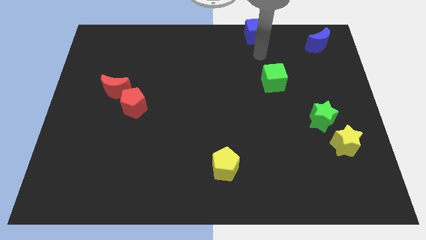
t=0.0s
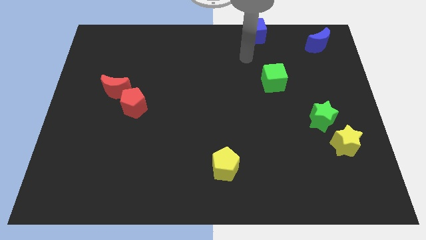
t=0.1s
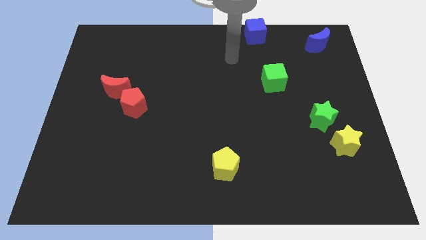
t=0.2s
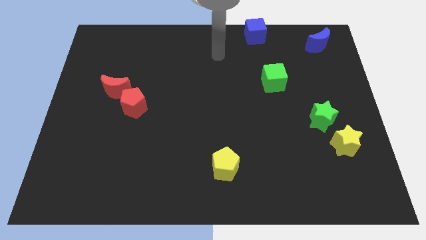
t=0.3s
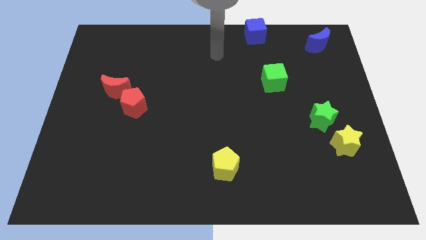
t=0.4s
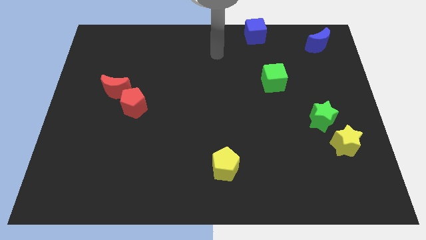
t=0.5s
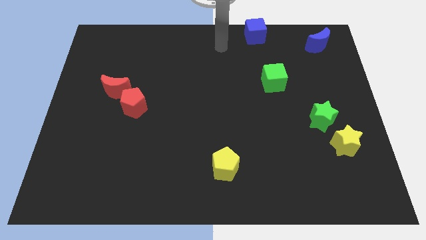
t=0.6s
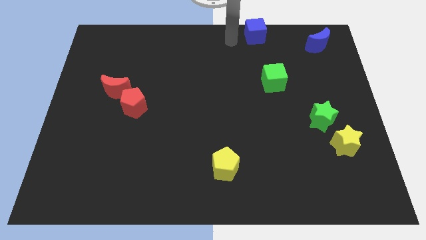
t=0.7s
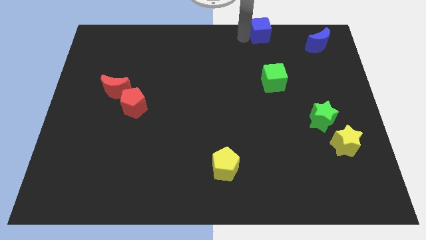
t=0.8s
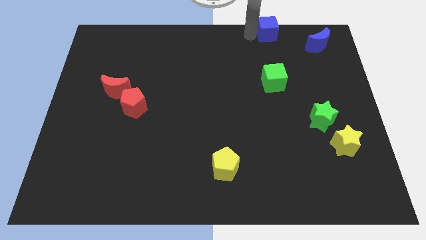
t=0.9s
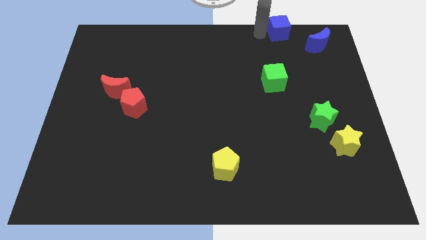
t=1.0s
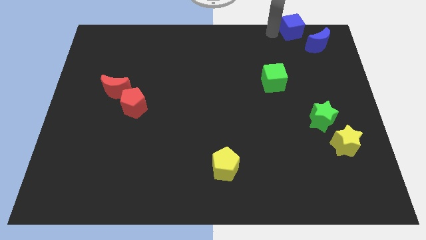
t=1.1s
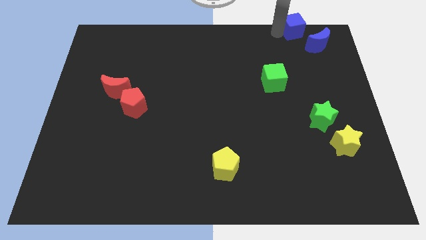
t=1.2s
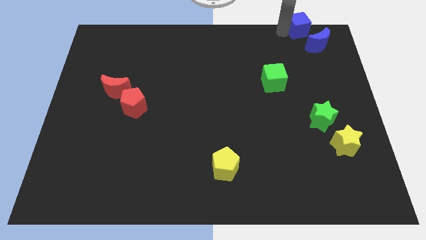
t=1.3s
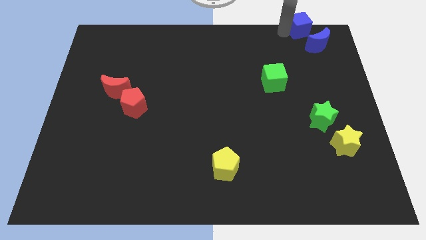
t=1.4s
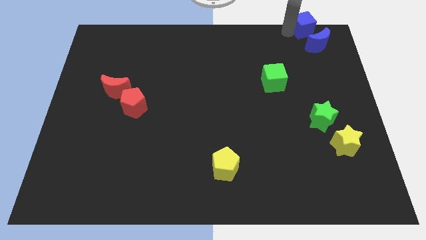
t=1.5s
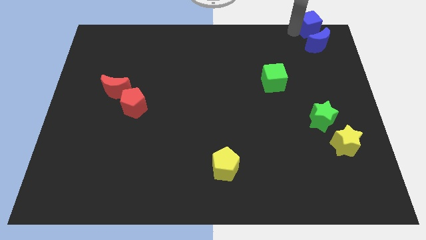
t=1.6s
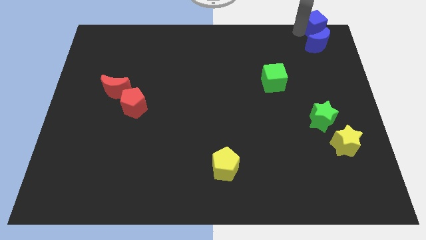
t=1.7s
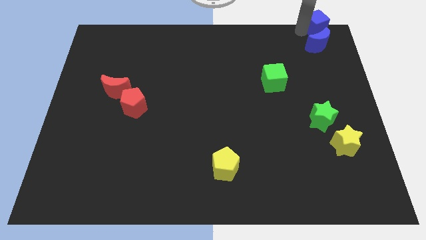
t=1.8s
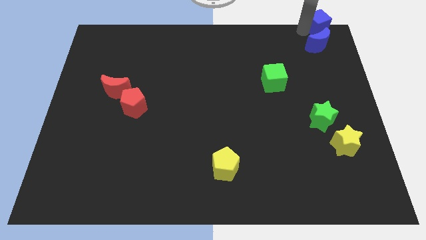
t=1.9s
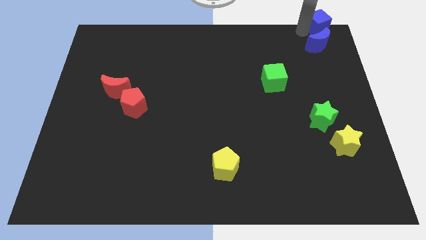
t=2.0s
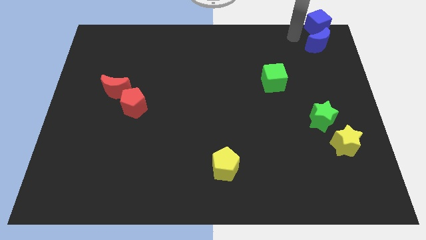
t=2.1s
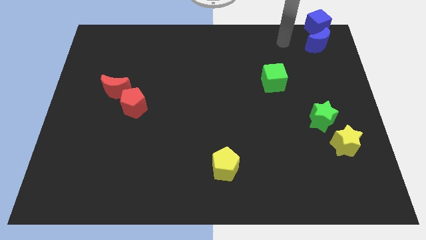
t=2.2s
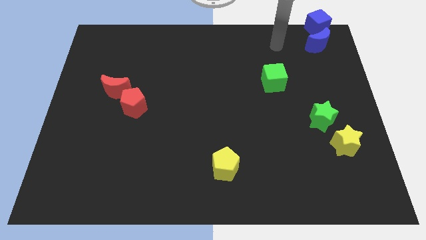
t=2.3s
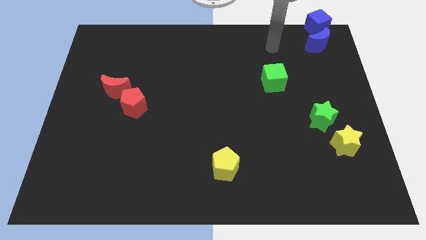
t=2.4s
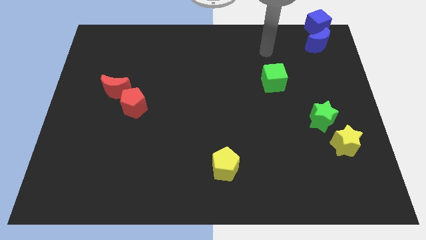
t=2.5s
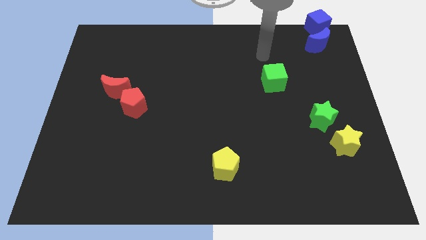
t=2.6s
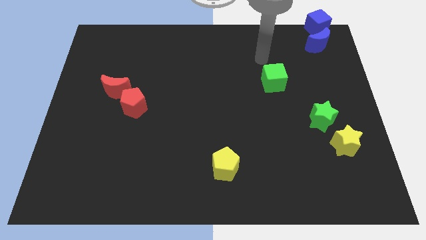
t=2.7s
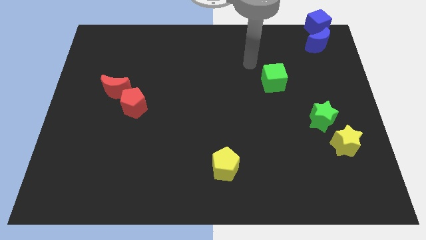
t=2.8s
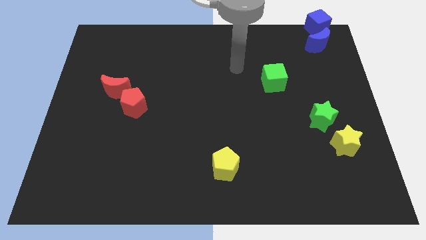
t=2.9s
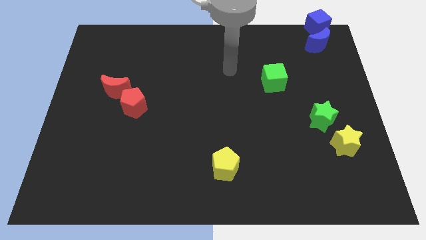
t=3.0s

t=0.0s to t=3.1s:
slide blue cube towards top right

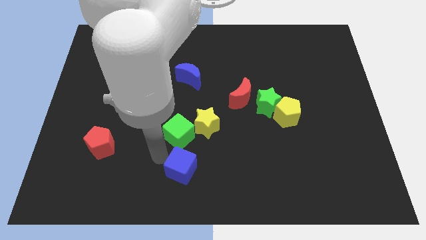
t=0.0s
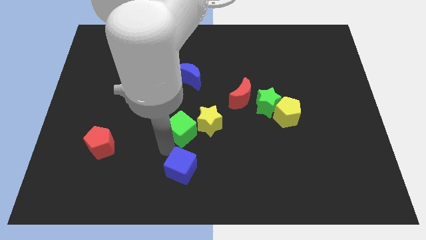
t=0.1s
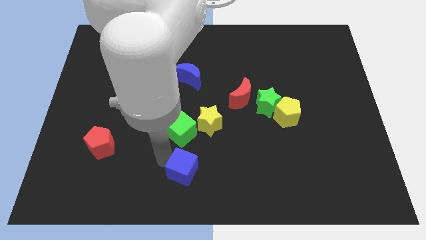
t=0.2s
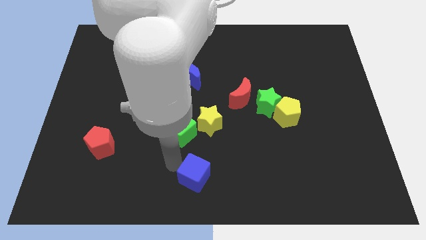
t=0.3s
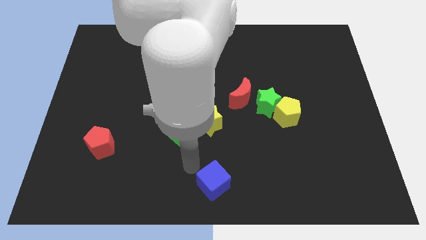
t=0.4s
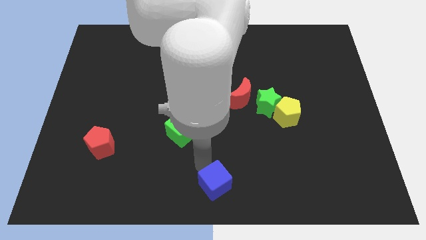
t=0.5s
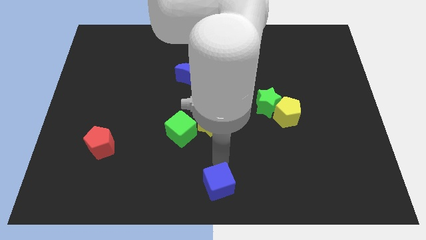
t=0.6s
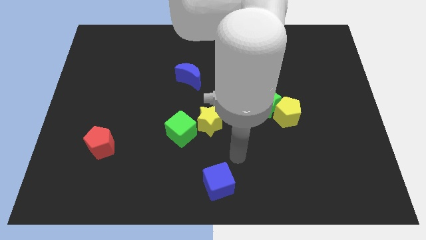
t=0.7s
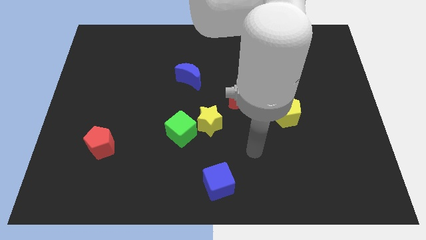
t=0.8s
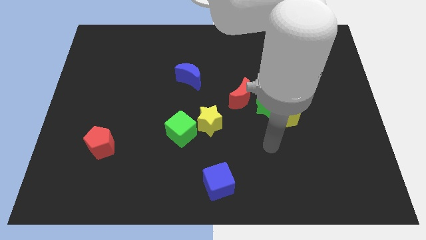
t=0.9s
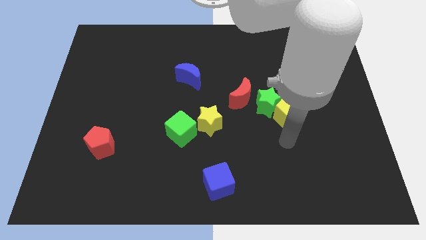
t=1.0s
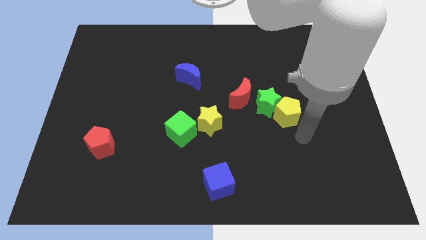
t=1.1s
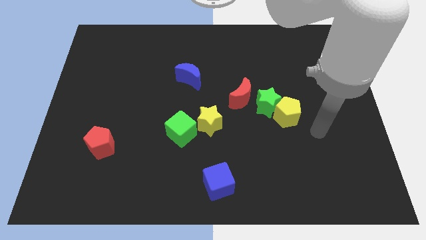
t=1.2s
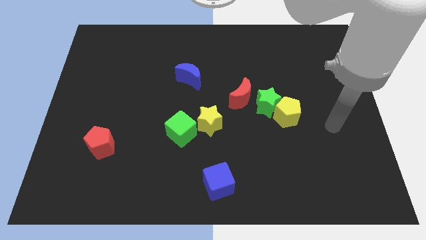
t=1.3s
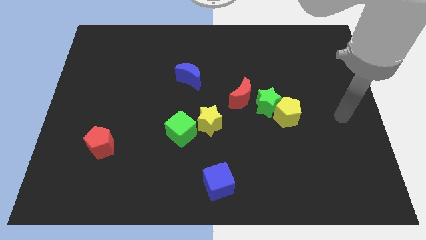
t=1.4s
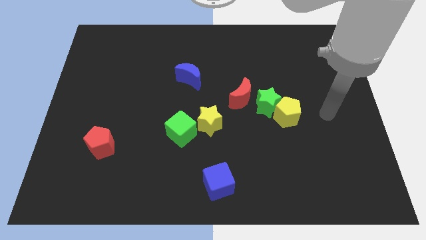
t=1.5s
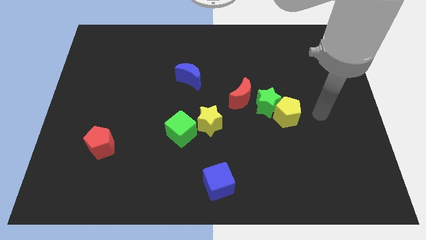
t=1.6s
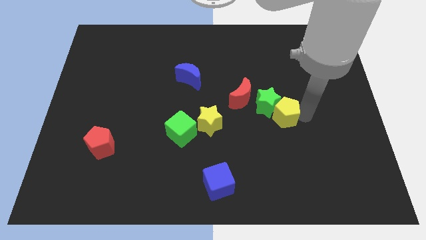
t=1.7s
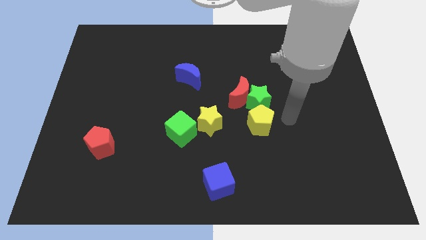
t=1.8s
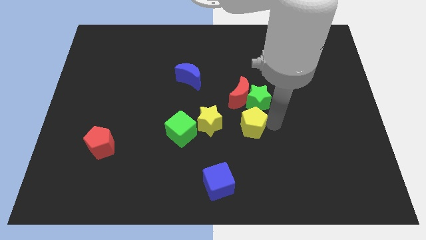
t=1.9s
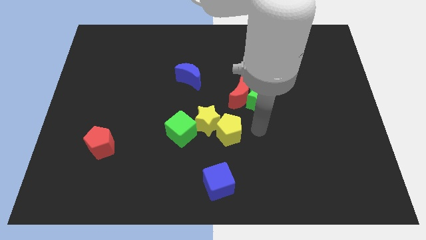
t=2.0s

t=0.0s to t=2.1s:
move yellow pentagon close to yellow star

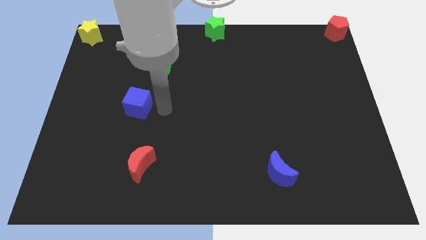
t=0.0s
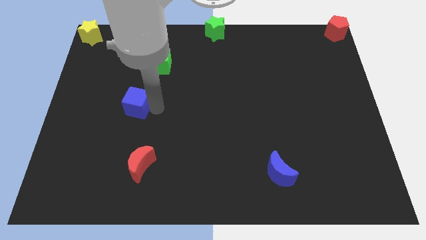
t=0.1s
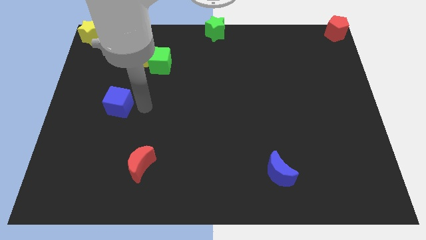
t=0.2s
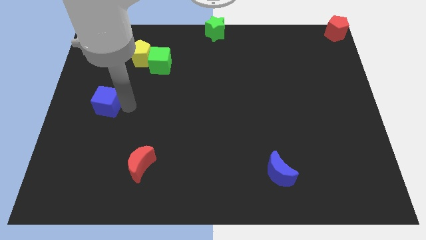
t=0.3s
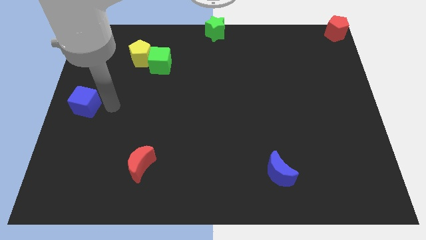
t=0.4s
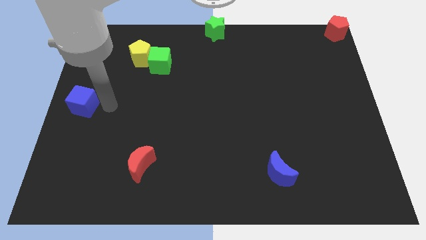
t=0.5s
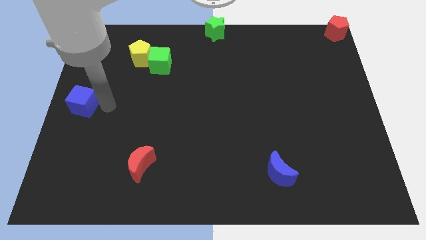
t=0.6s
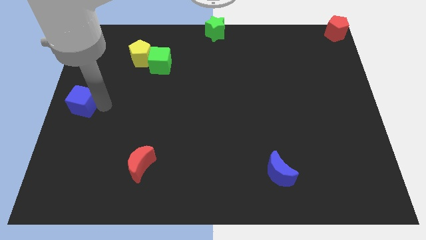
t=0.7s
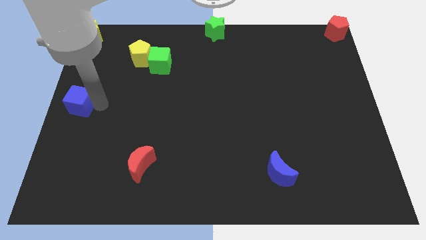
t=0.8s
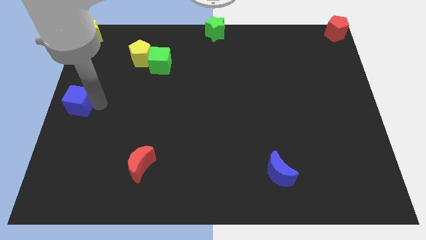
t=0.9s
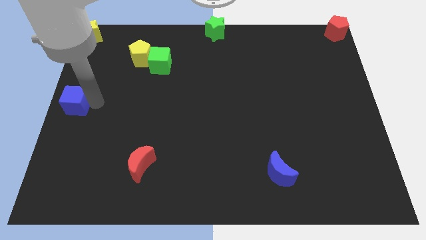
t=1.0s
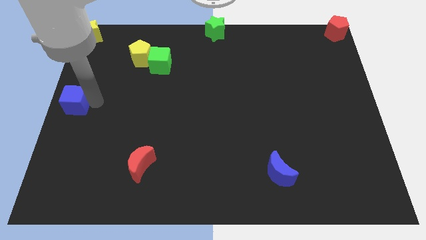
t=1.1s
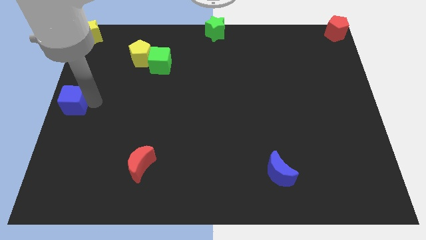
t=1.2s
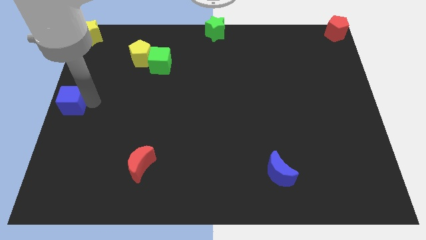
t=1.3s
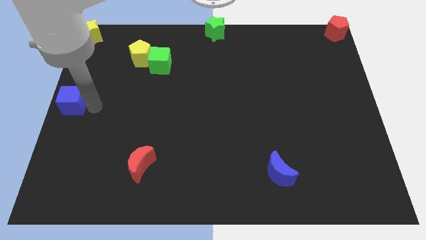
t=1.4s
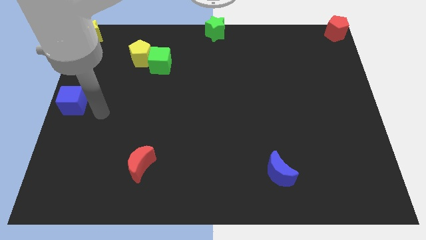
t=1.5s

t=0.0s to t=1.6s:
place the blue cube to the left center

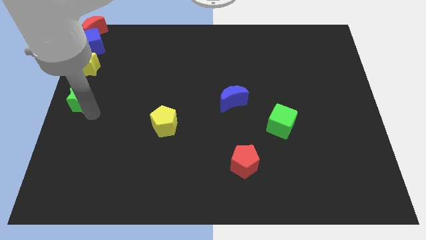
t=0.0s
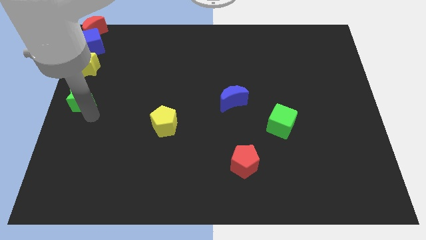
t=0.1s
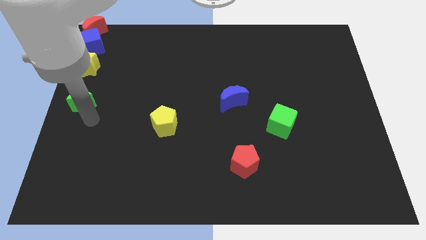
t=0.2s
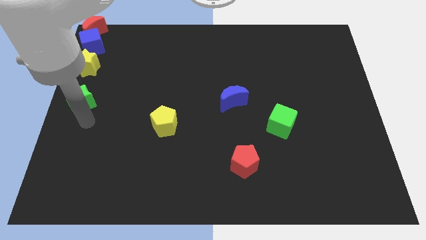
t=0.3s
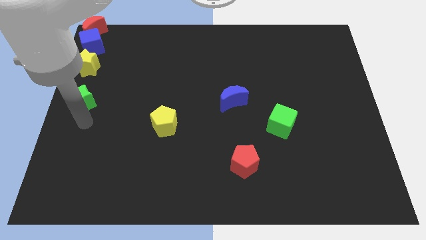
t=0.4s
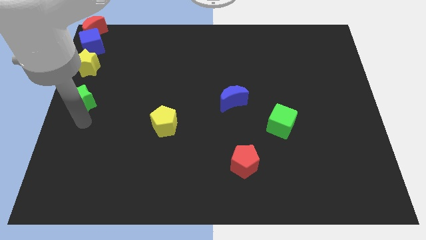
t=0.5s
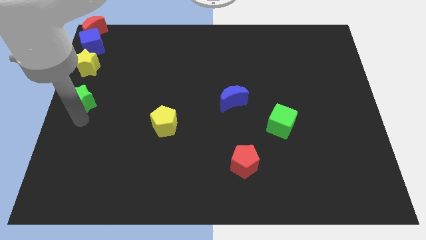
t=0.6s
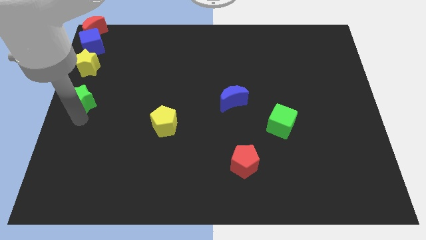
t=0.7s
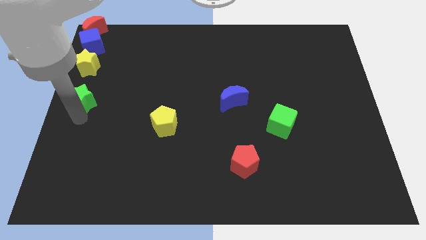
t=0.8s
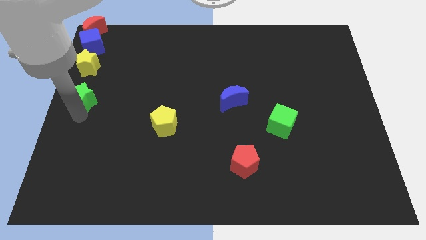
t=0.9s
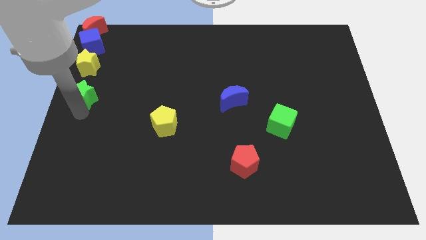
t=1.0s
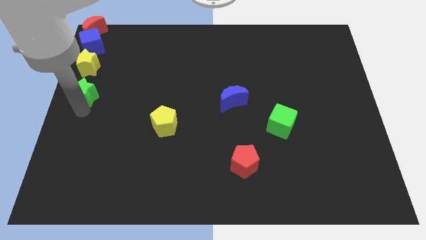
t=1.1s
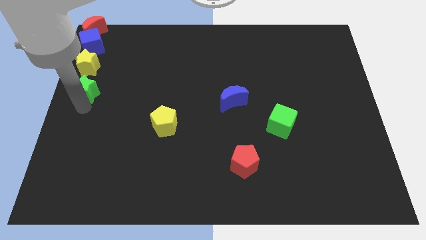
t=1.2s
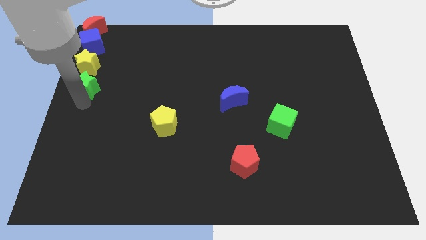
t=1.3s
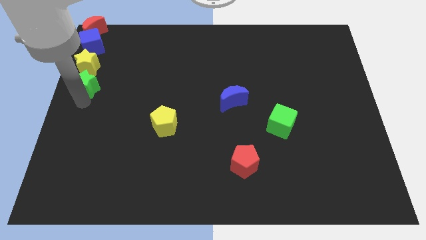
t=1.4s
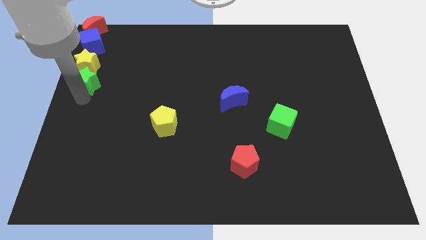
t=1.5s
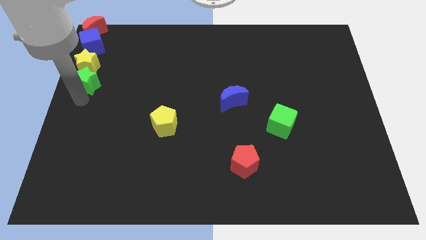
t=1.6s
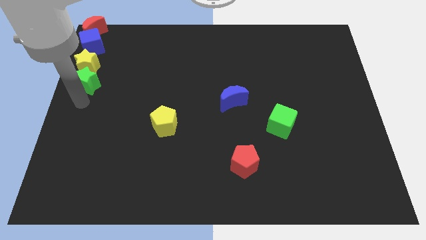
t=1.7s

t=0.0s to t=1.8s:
push the green star into the yellow star
